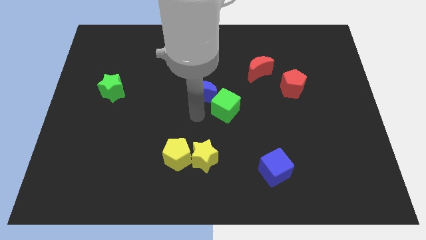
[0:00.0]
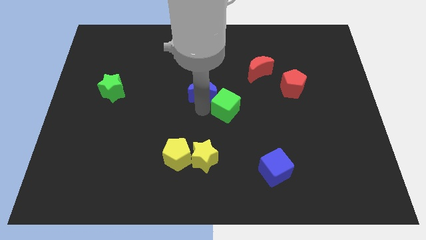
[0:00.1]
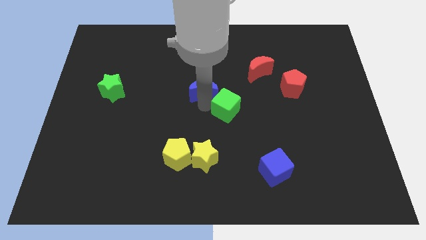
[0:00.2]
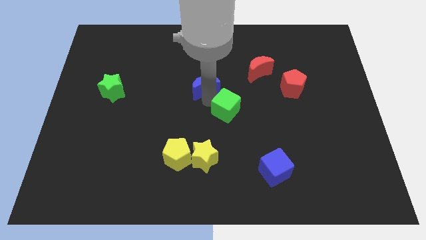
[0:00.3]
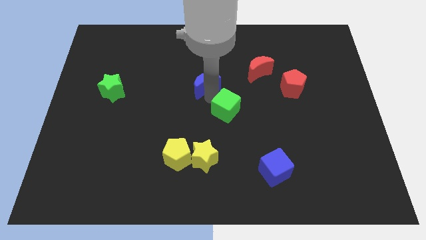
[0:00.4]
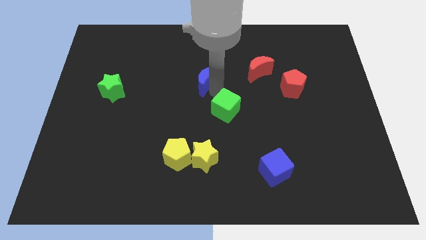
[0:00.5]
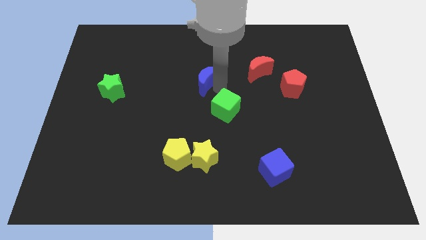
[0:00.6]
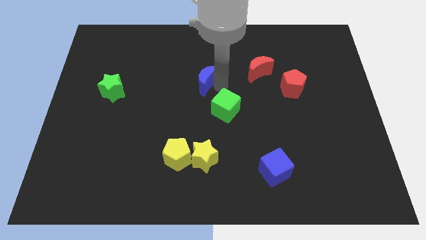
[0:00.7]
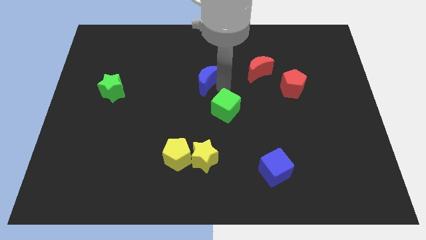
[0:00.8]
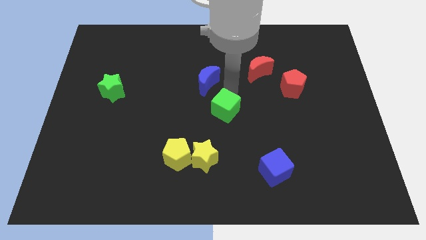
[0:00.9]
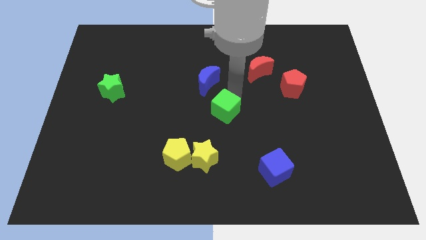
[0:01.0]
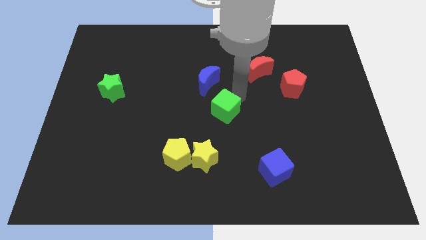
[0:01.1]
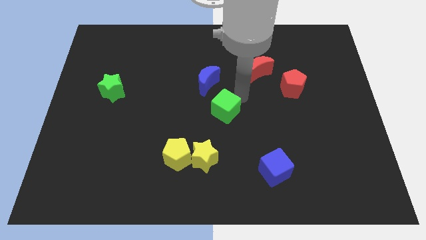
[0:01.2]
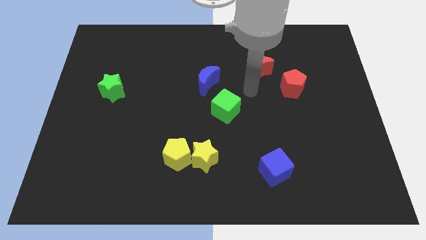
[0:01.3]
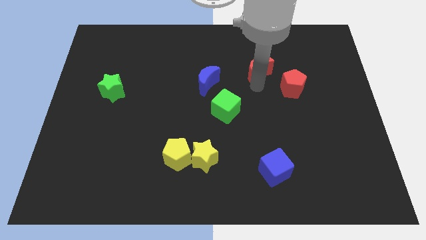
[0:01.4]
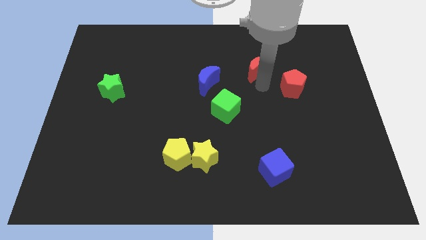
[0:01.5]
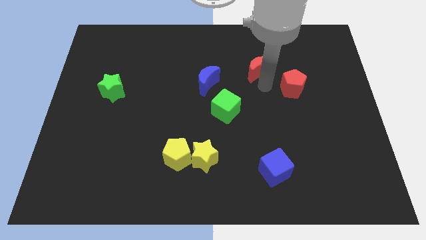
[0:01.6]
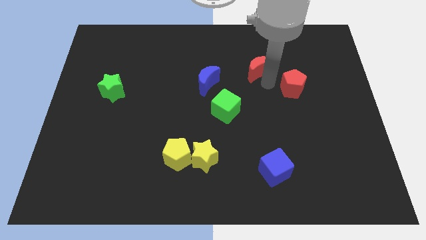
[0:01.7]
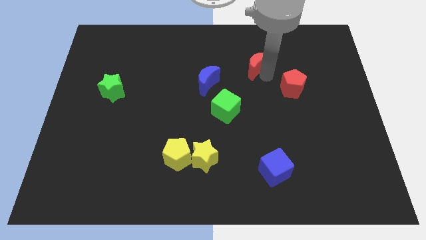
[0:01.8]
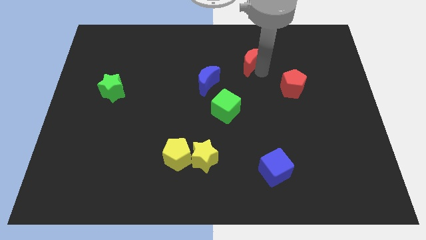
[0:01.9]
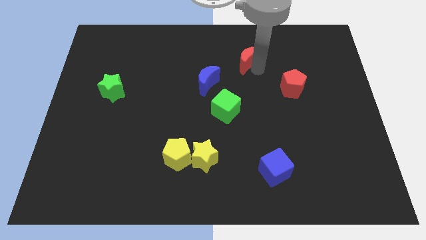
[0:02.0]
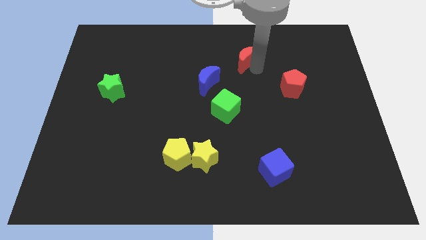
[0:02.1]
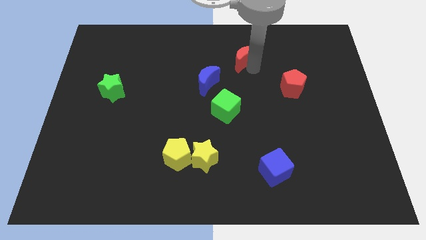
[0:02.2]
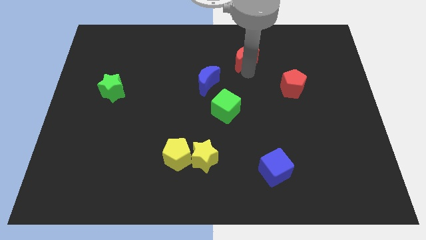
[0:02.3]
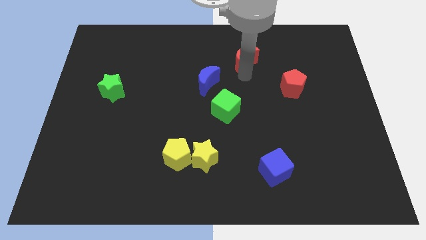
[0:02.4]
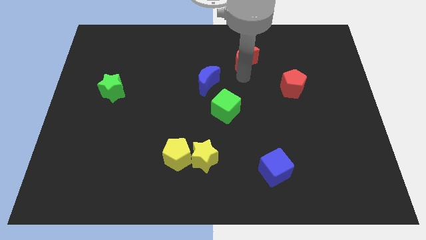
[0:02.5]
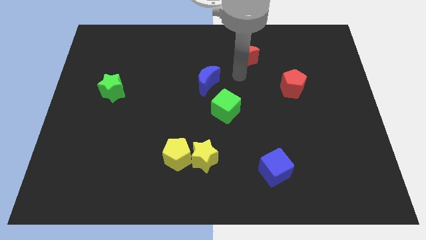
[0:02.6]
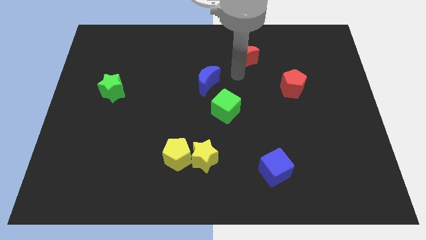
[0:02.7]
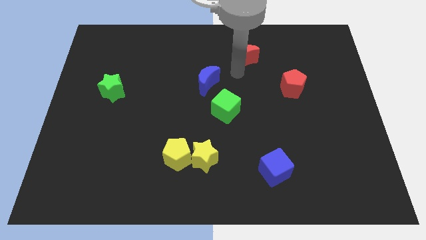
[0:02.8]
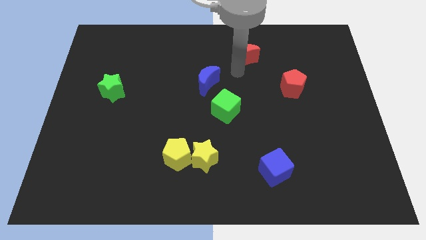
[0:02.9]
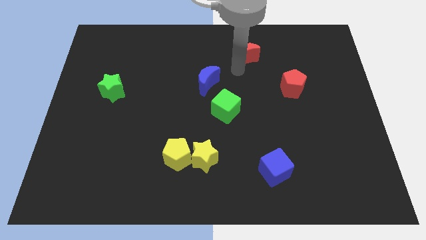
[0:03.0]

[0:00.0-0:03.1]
align blue moon red moon in a diagonal line

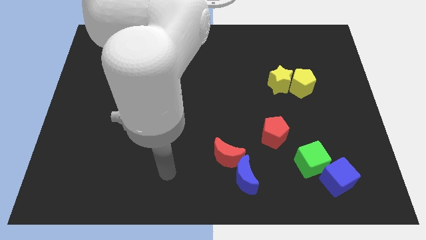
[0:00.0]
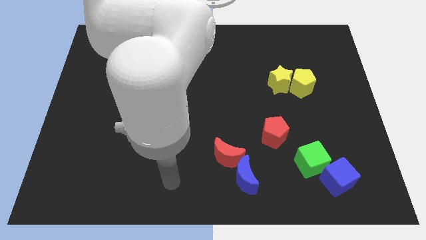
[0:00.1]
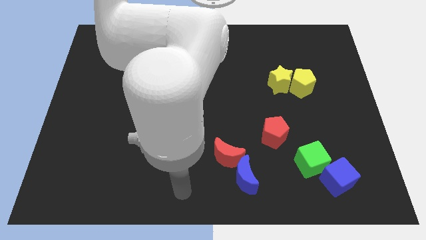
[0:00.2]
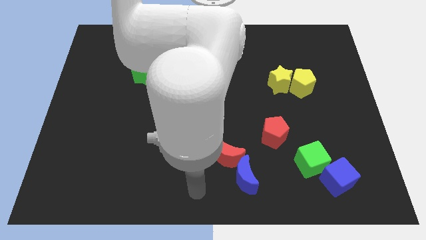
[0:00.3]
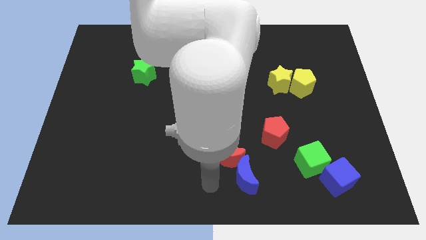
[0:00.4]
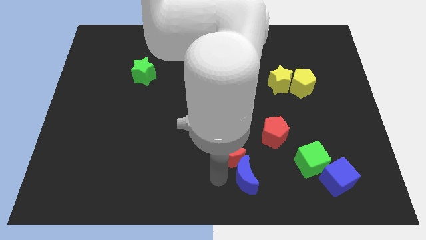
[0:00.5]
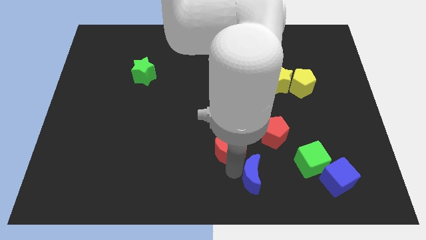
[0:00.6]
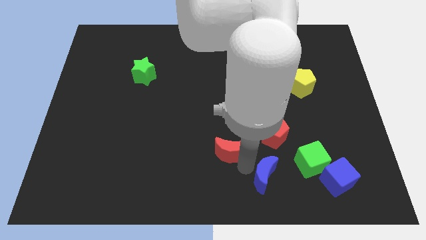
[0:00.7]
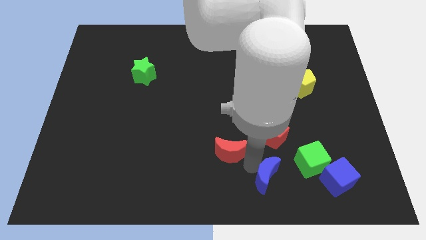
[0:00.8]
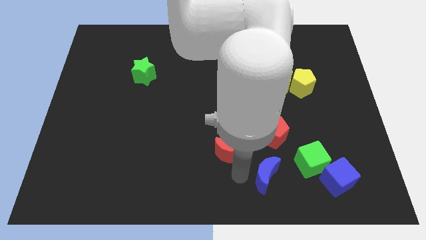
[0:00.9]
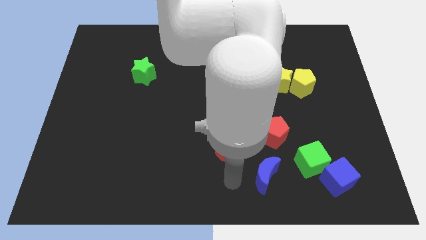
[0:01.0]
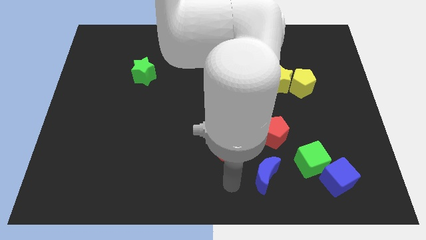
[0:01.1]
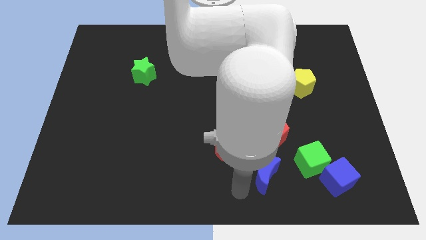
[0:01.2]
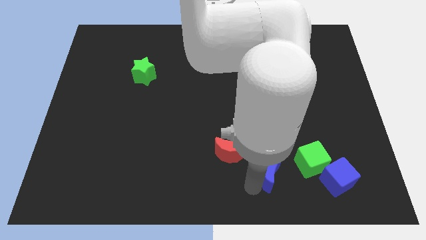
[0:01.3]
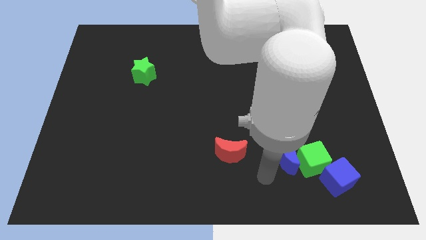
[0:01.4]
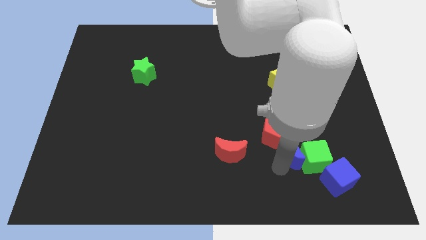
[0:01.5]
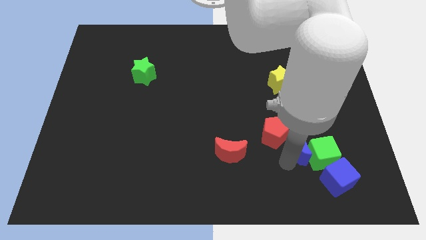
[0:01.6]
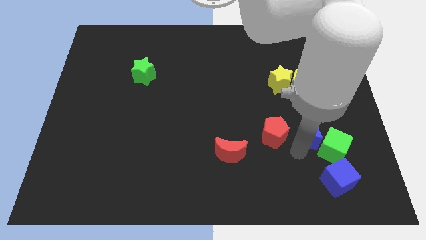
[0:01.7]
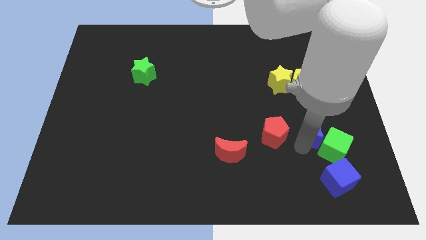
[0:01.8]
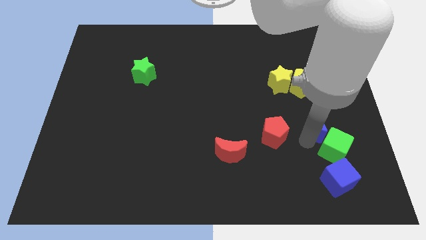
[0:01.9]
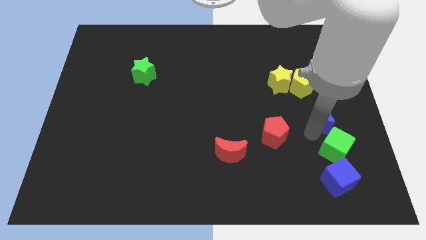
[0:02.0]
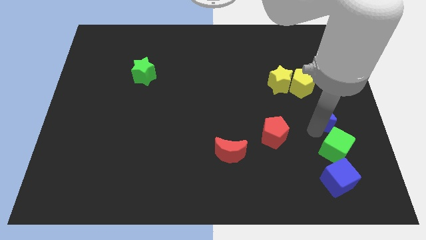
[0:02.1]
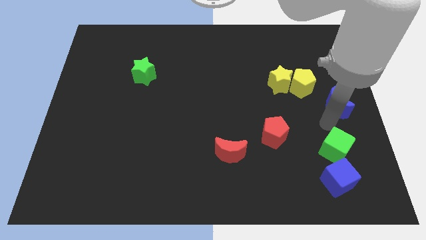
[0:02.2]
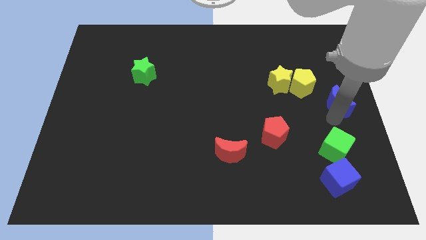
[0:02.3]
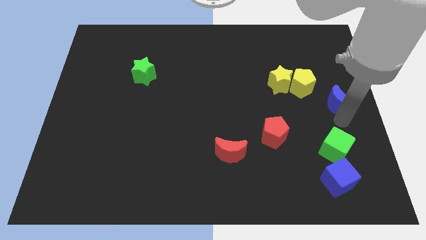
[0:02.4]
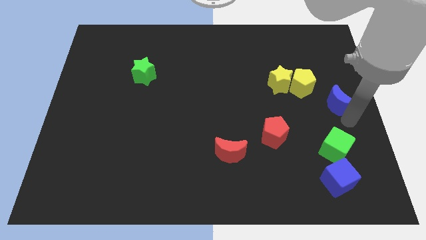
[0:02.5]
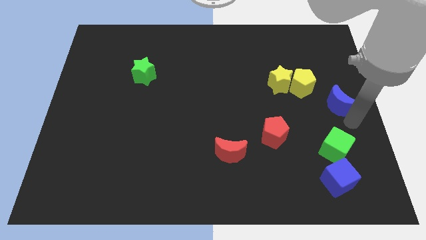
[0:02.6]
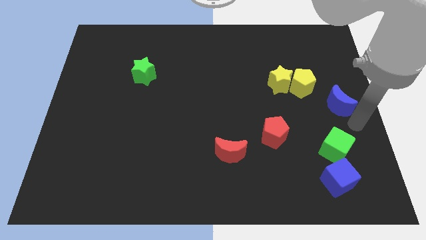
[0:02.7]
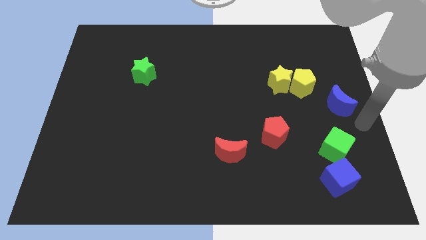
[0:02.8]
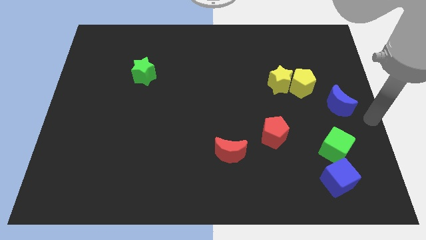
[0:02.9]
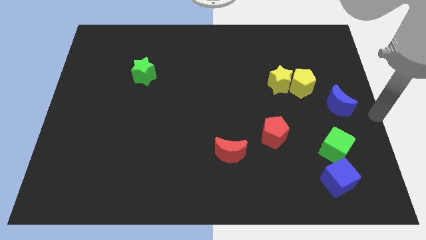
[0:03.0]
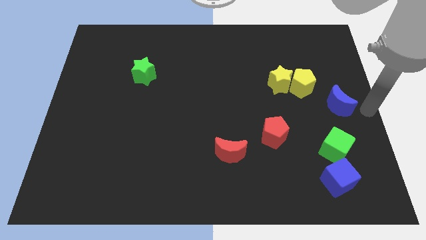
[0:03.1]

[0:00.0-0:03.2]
move the blue crescent to the center right of the board

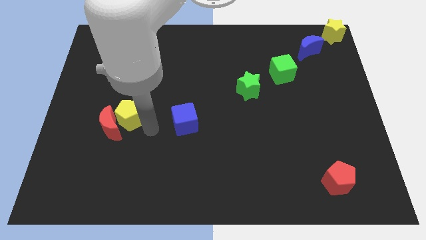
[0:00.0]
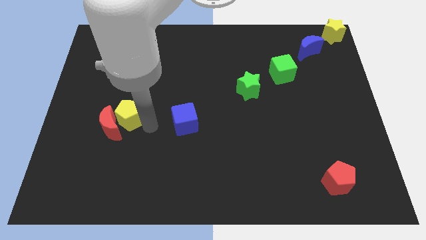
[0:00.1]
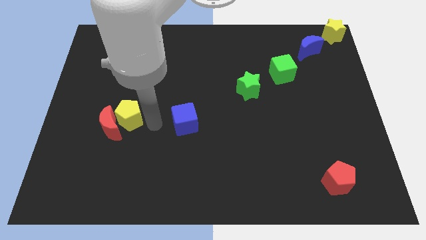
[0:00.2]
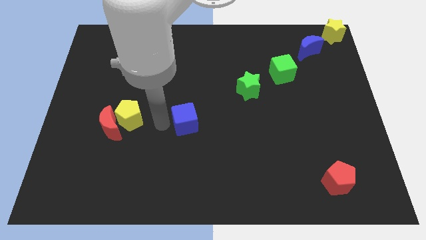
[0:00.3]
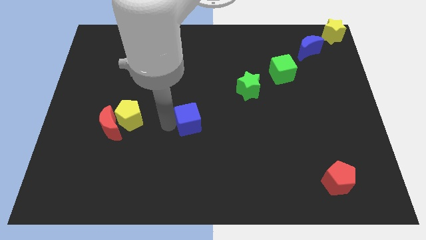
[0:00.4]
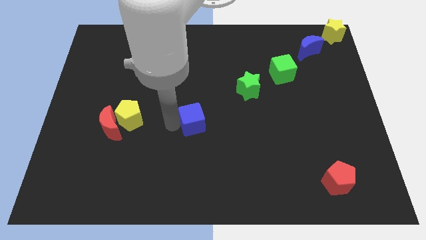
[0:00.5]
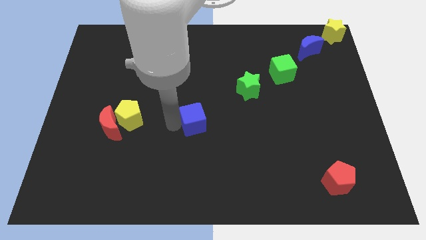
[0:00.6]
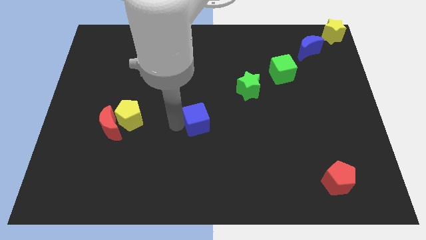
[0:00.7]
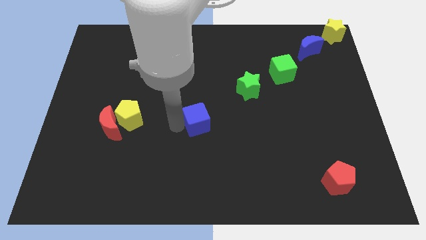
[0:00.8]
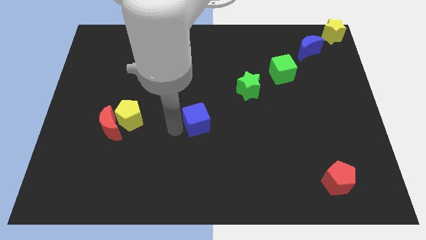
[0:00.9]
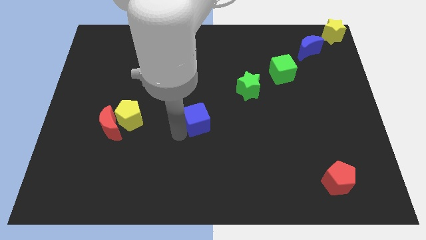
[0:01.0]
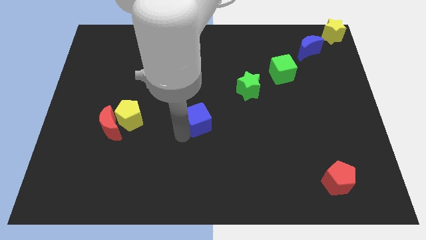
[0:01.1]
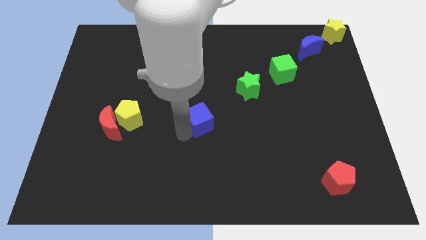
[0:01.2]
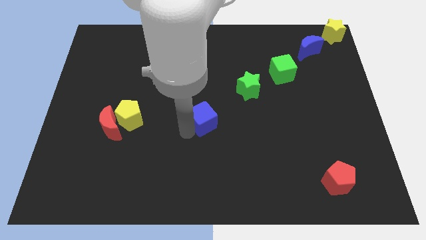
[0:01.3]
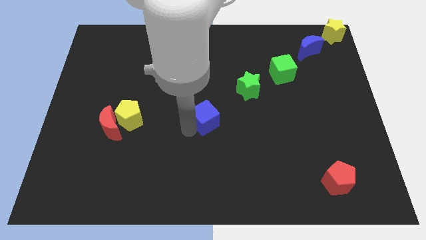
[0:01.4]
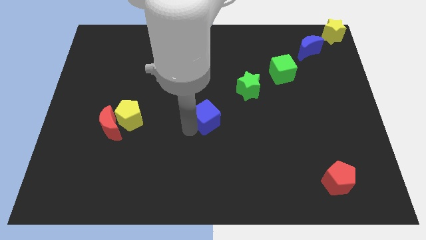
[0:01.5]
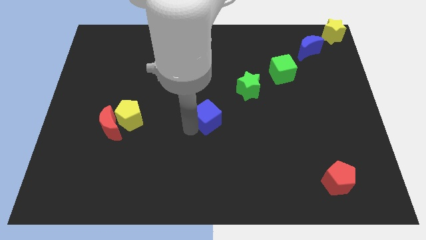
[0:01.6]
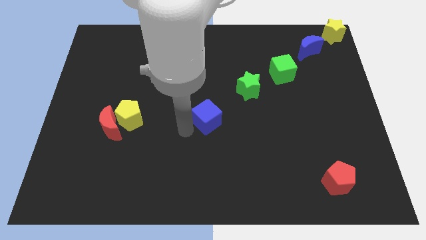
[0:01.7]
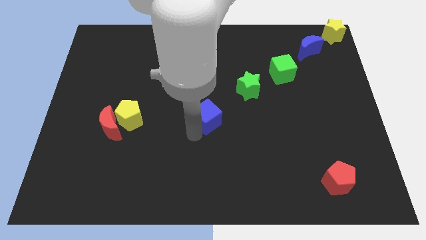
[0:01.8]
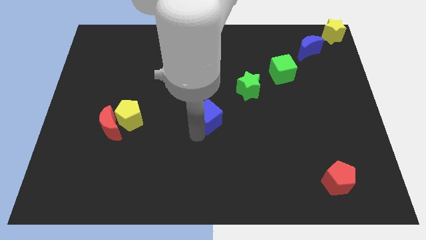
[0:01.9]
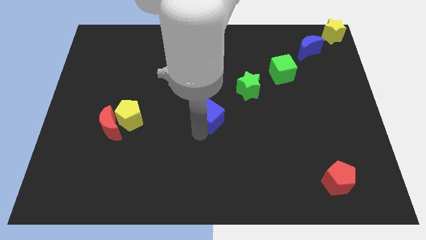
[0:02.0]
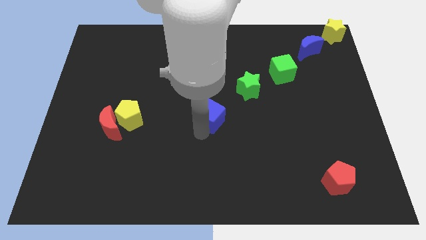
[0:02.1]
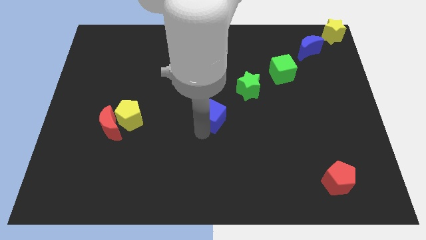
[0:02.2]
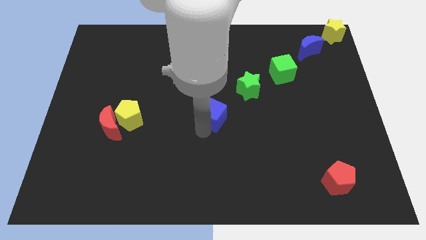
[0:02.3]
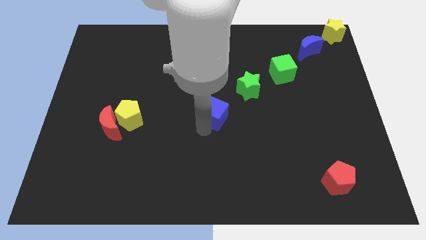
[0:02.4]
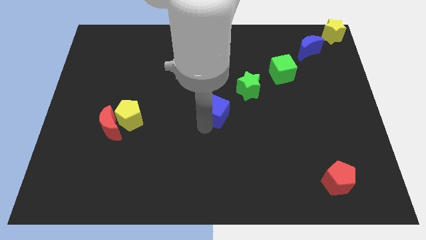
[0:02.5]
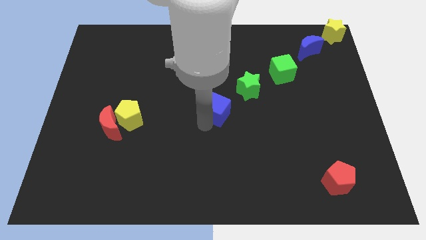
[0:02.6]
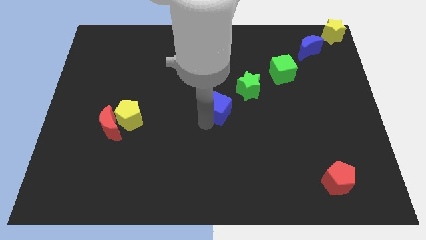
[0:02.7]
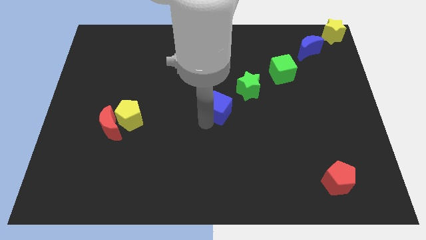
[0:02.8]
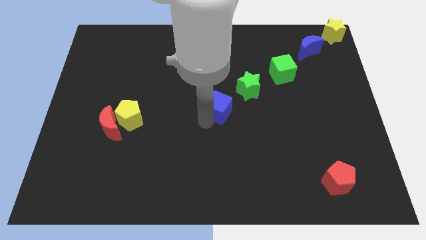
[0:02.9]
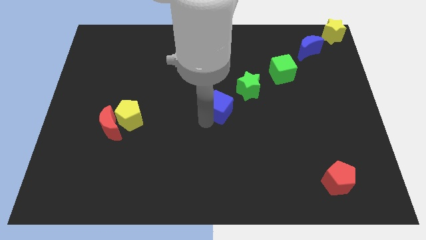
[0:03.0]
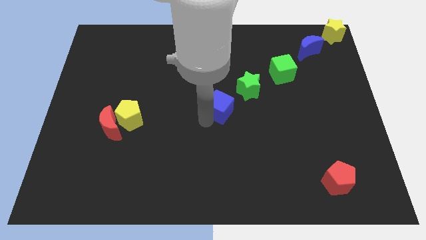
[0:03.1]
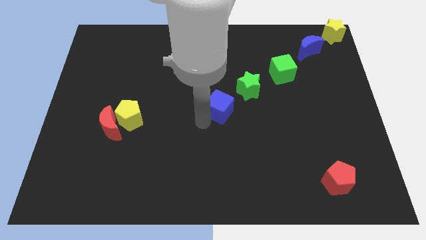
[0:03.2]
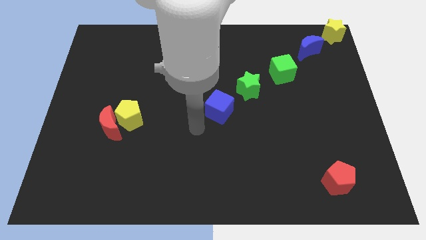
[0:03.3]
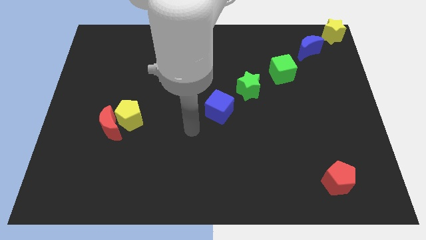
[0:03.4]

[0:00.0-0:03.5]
place blue cube diagonal to green star
